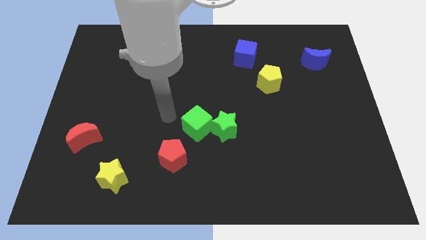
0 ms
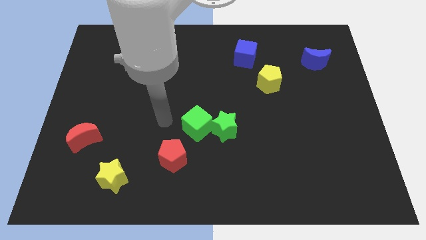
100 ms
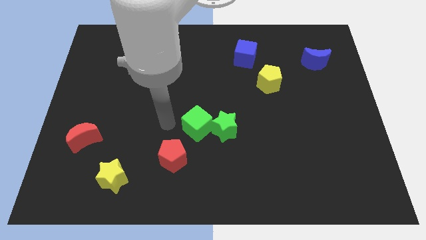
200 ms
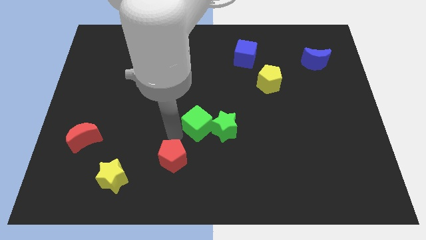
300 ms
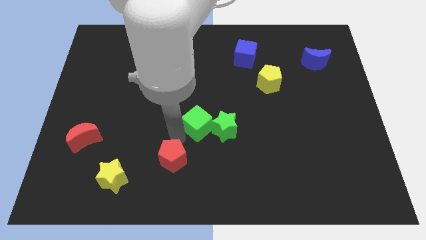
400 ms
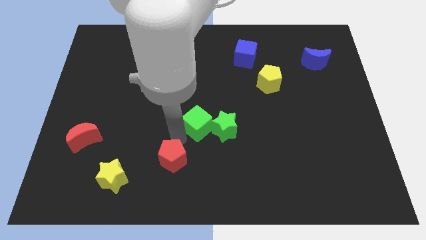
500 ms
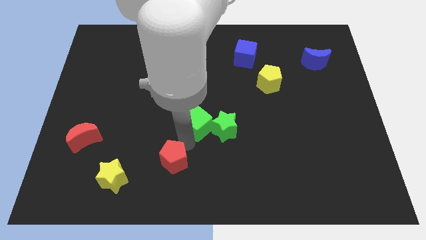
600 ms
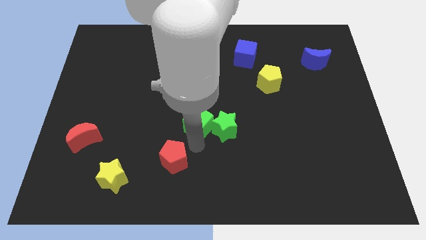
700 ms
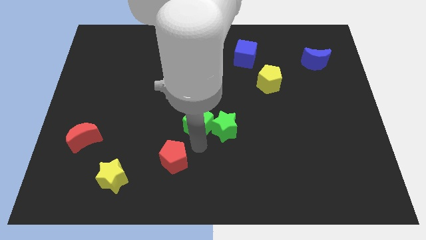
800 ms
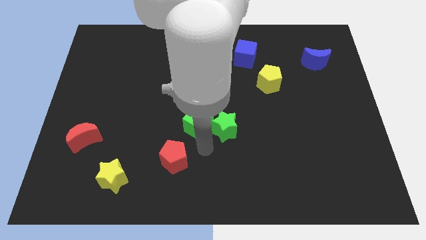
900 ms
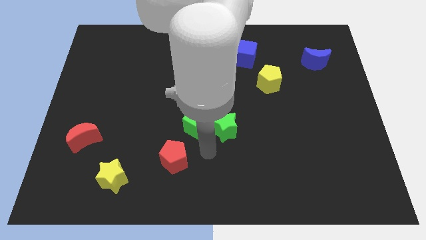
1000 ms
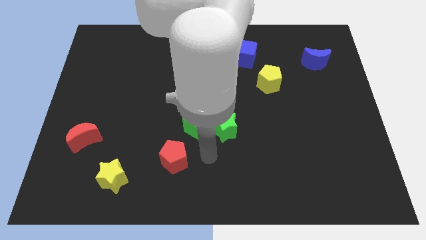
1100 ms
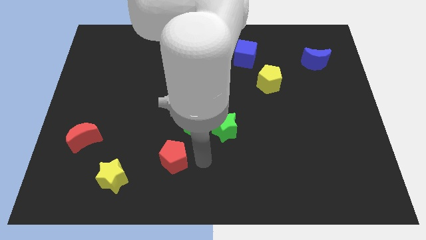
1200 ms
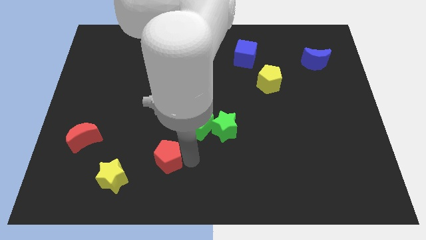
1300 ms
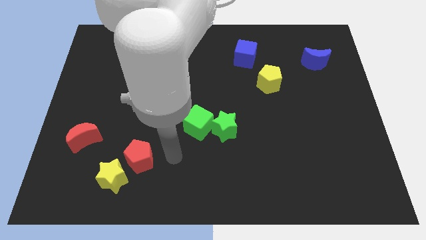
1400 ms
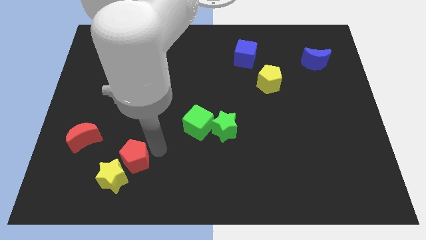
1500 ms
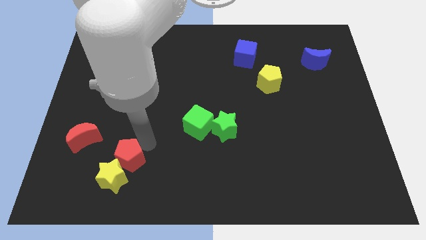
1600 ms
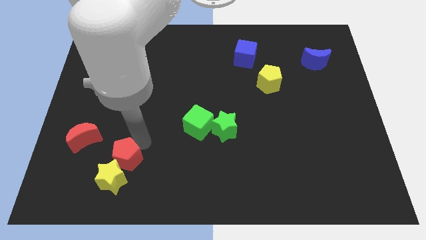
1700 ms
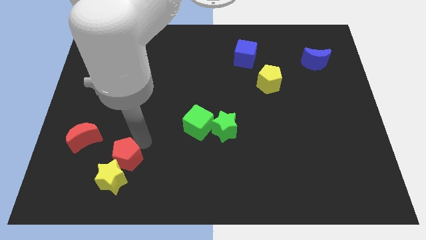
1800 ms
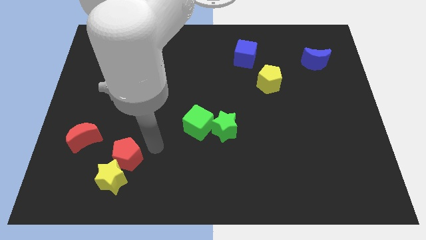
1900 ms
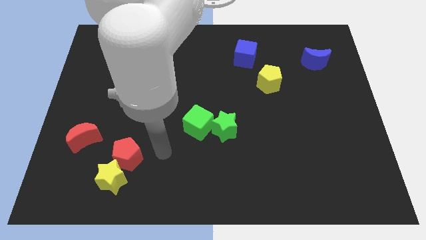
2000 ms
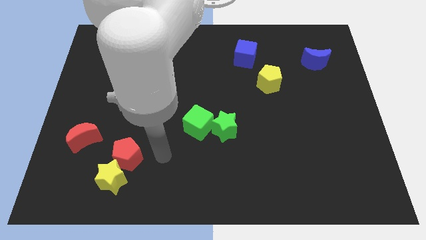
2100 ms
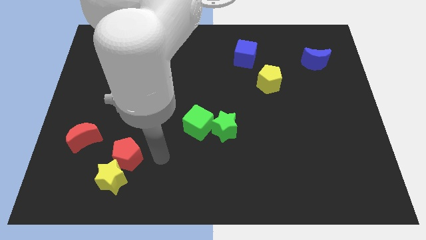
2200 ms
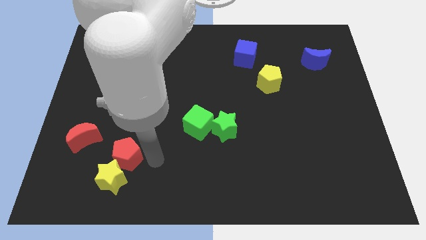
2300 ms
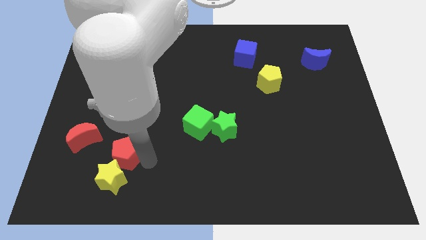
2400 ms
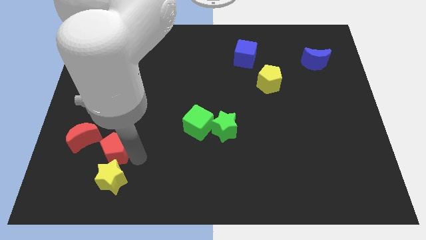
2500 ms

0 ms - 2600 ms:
push red pentagon above yellow star

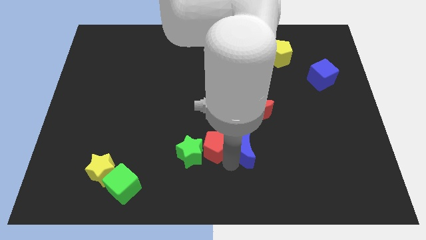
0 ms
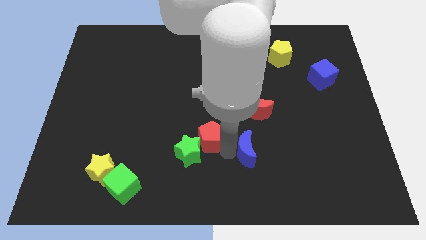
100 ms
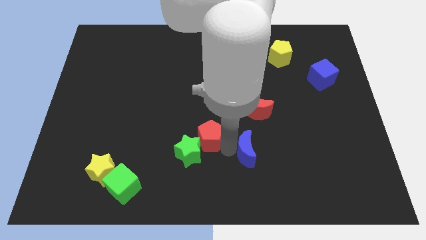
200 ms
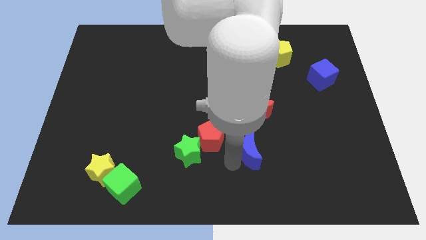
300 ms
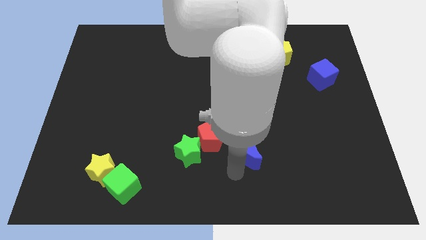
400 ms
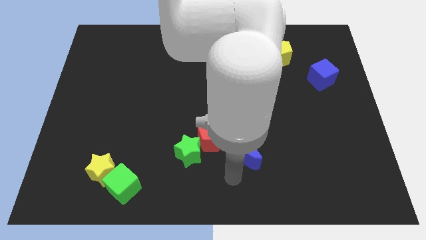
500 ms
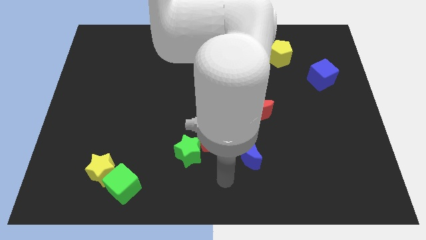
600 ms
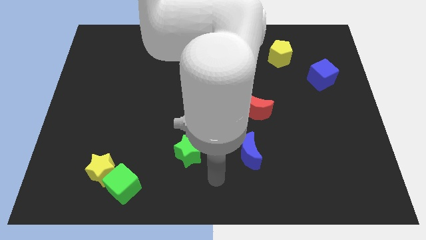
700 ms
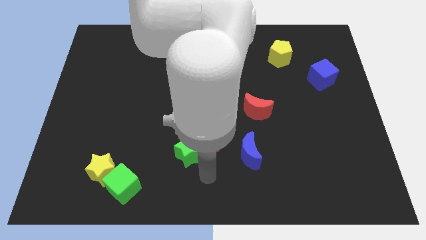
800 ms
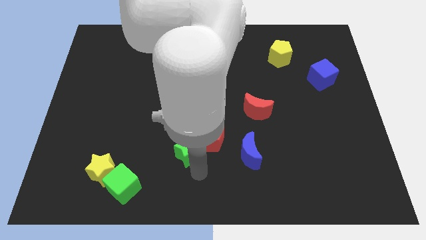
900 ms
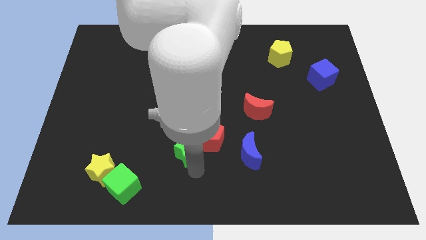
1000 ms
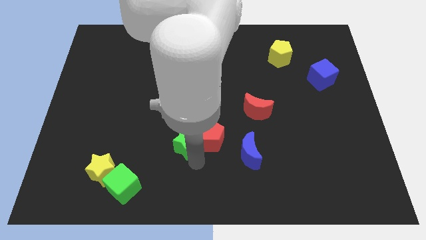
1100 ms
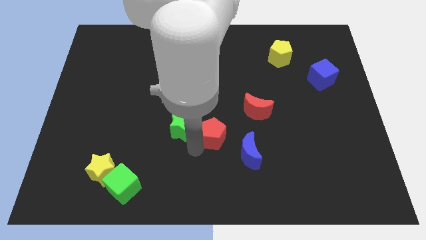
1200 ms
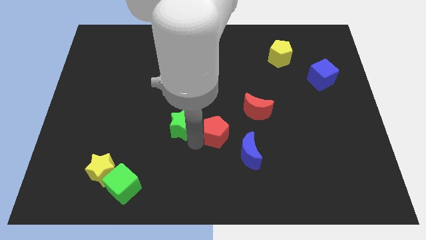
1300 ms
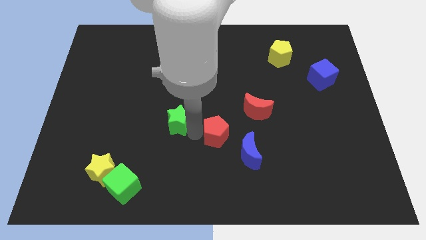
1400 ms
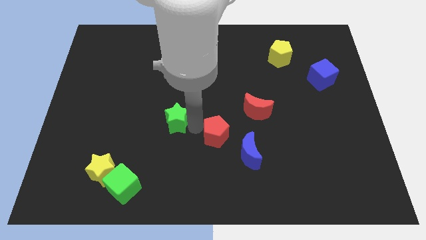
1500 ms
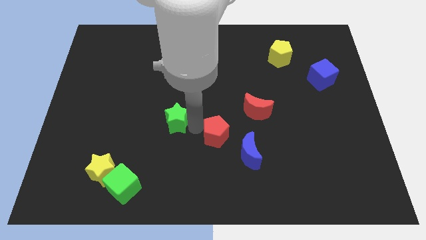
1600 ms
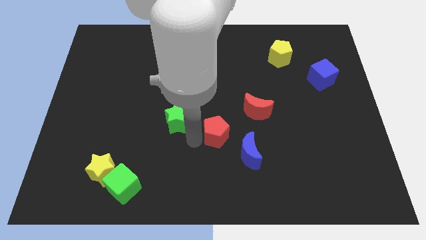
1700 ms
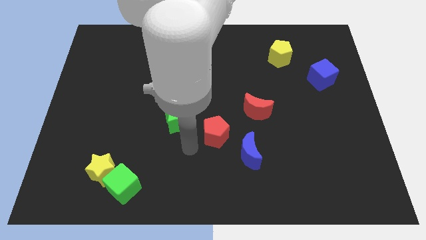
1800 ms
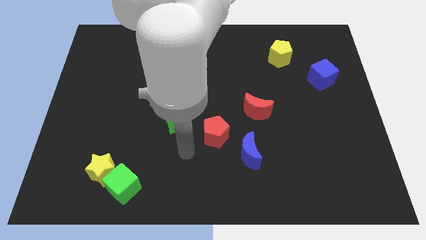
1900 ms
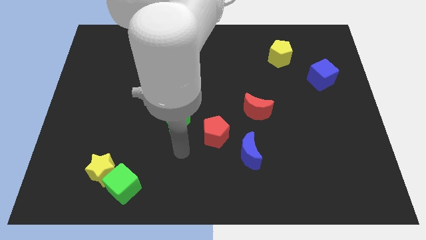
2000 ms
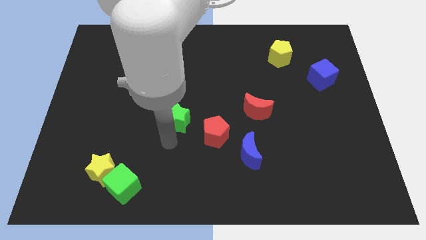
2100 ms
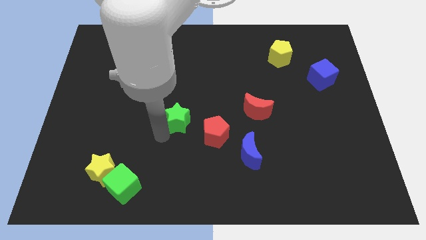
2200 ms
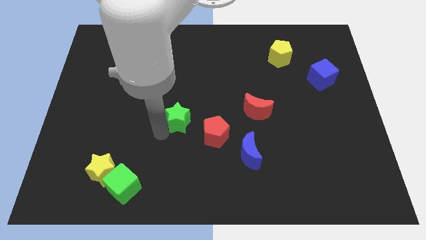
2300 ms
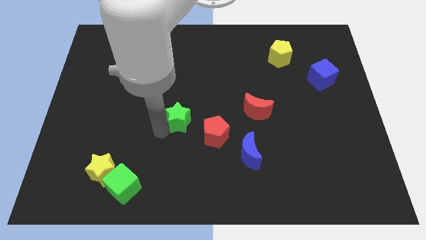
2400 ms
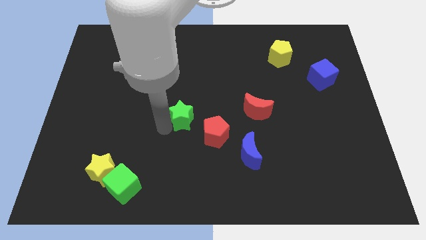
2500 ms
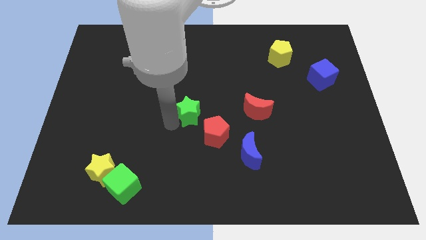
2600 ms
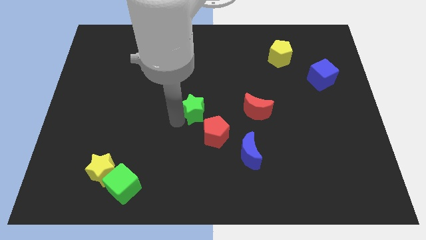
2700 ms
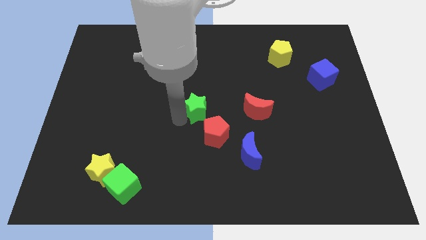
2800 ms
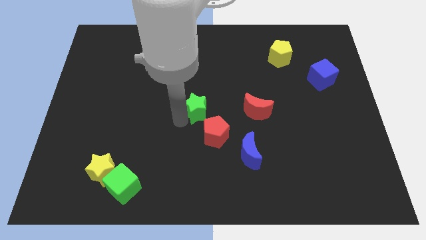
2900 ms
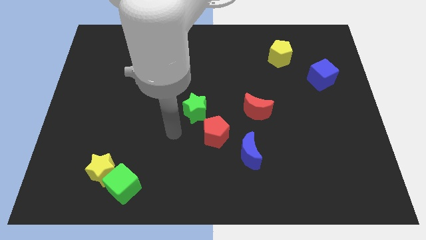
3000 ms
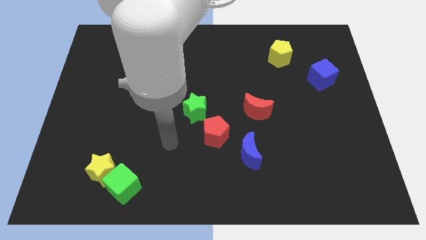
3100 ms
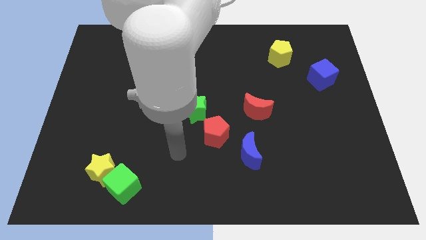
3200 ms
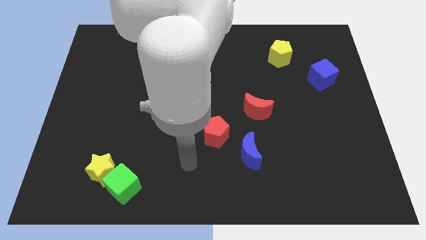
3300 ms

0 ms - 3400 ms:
push the green star to the top left of the red pentagon

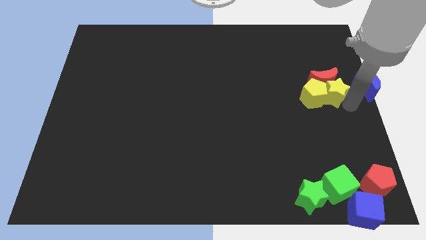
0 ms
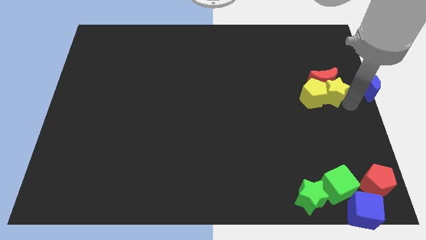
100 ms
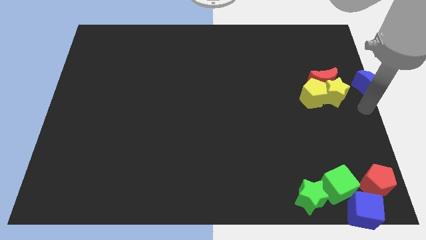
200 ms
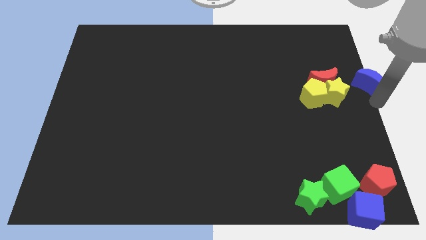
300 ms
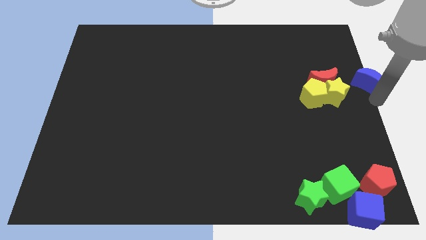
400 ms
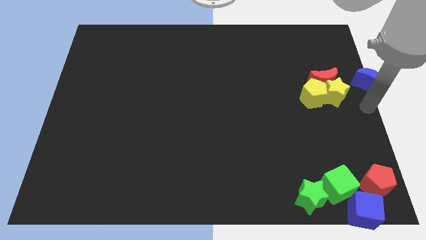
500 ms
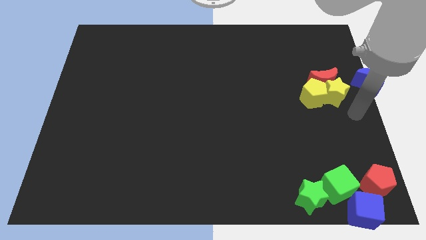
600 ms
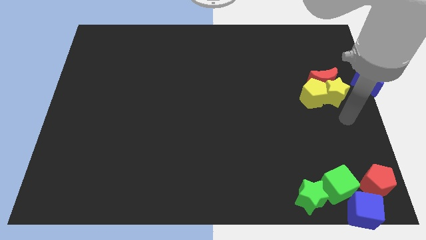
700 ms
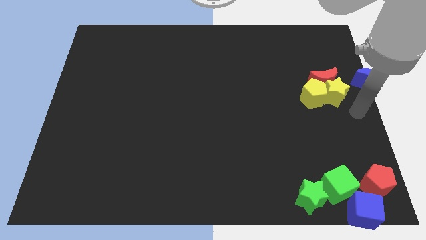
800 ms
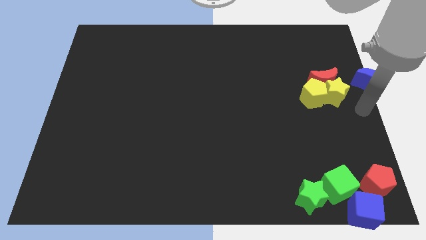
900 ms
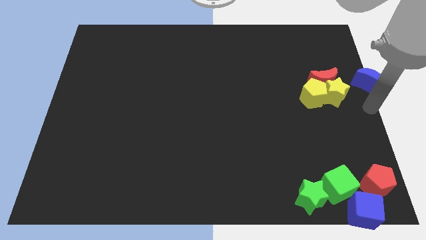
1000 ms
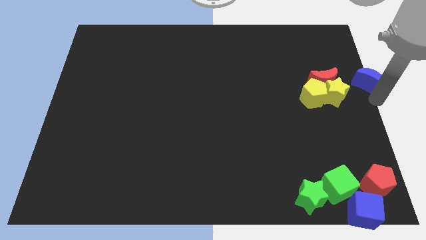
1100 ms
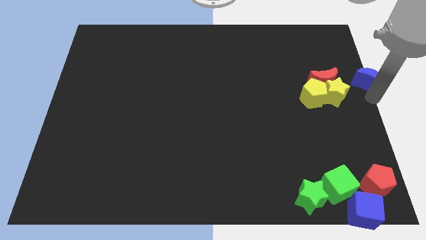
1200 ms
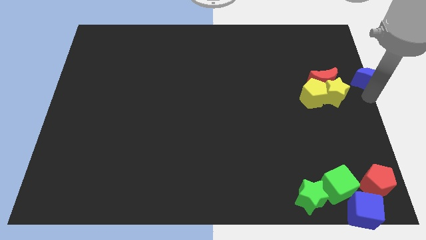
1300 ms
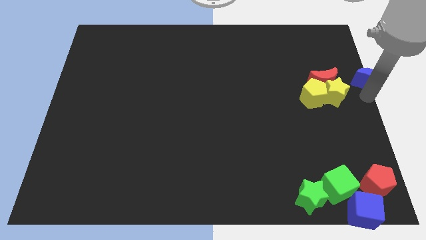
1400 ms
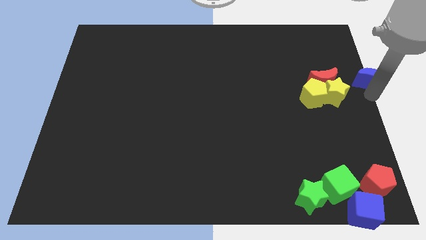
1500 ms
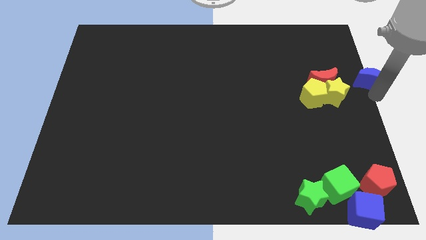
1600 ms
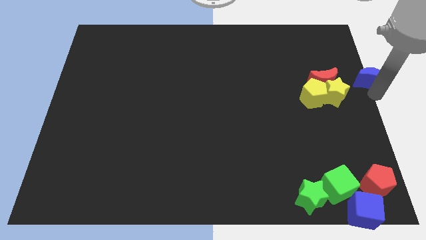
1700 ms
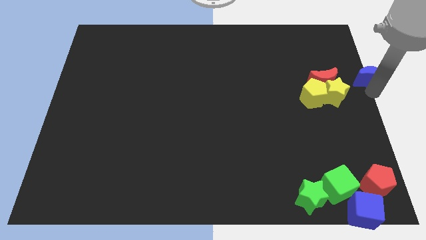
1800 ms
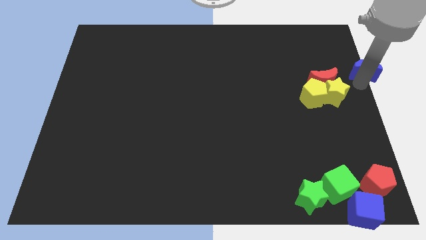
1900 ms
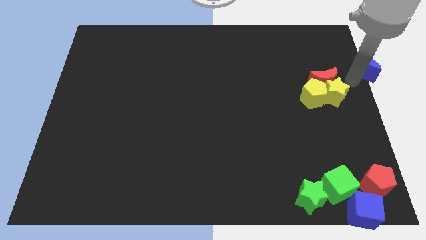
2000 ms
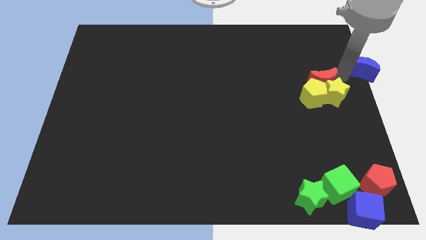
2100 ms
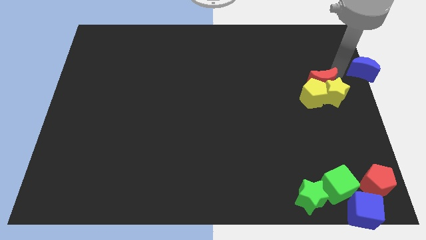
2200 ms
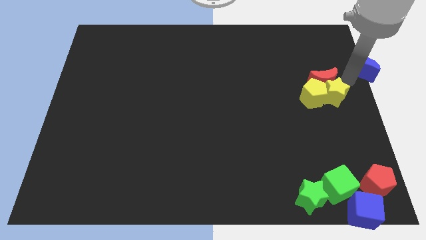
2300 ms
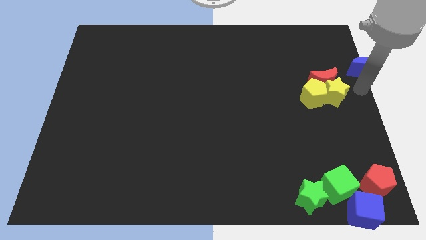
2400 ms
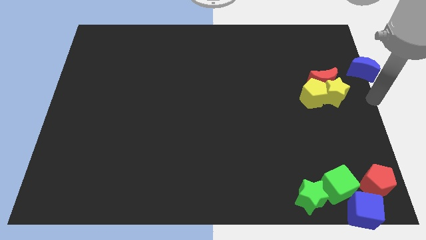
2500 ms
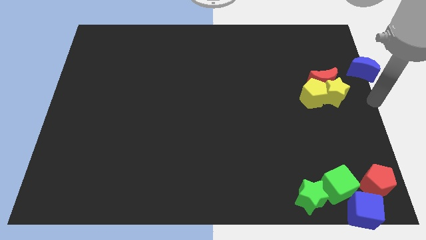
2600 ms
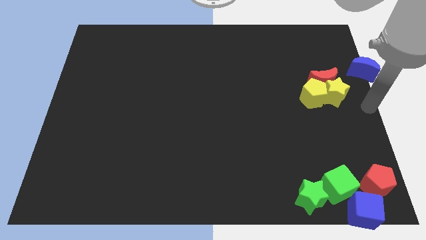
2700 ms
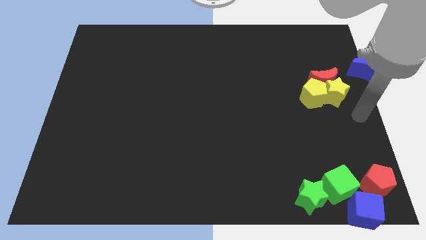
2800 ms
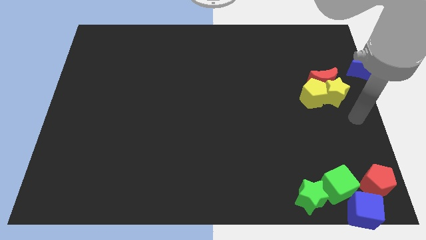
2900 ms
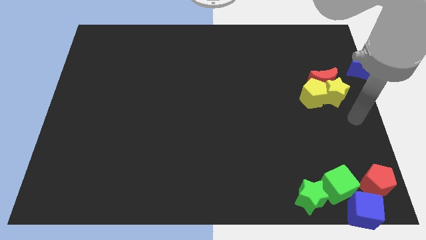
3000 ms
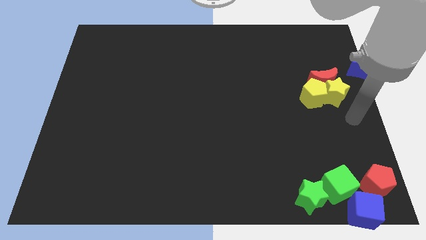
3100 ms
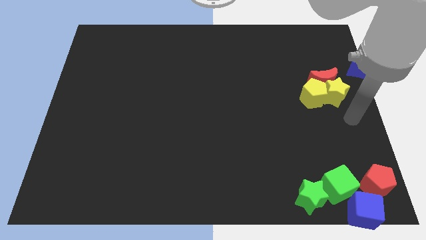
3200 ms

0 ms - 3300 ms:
move the blue crescent slightly towards the top
